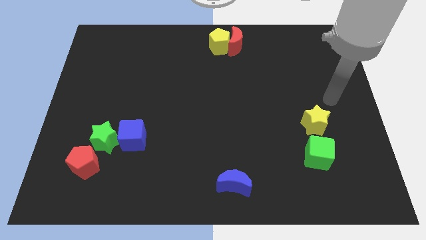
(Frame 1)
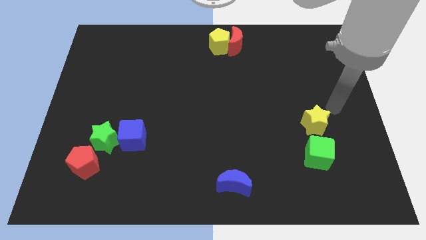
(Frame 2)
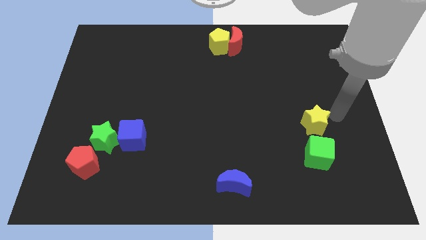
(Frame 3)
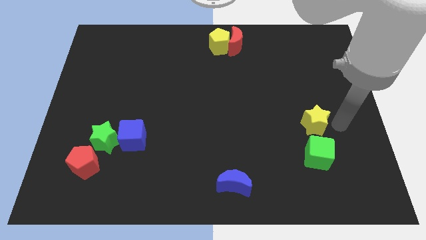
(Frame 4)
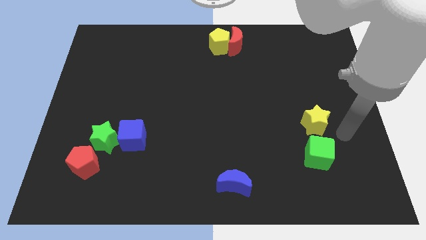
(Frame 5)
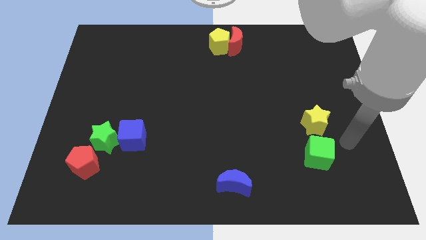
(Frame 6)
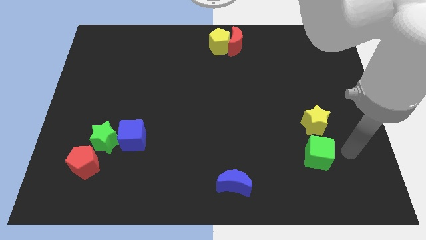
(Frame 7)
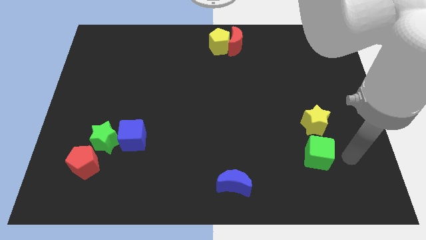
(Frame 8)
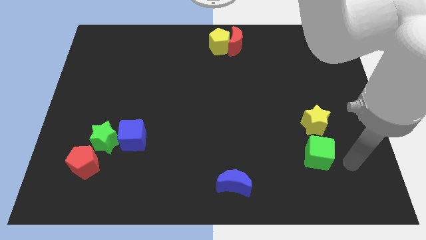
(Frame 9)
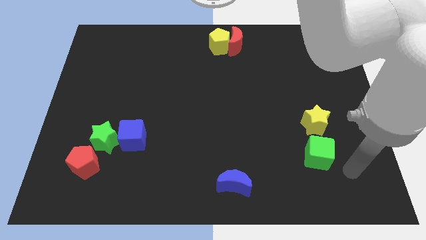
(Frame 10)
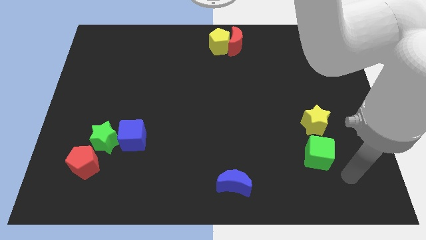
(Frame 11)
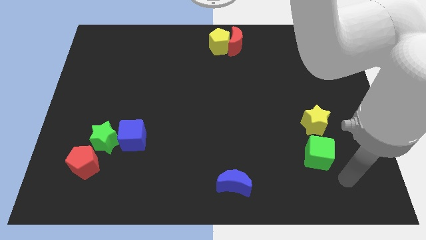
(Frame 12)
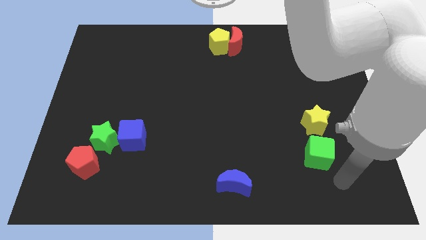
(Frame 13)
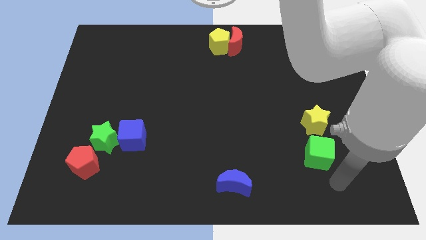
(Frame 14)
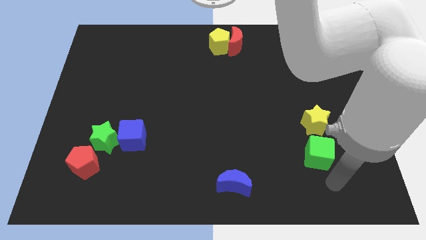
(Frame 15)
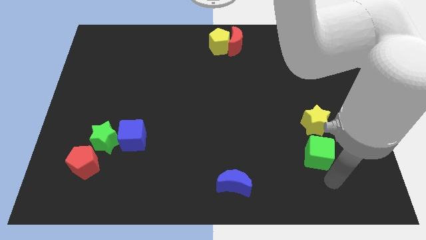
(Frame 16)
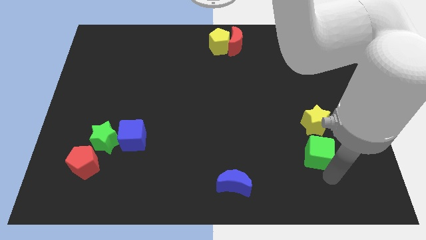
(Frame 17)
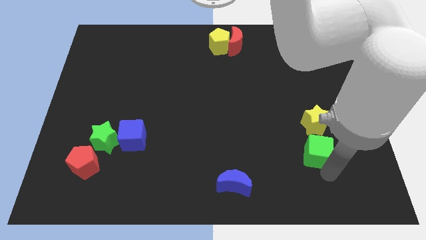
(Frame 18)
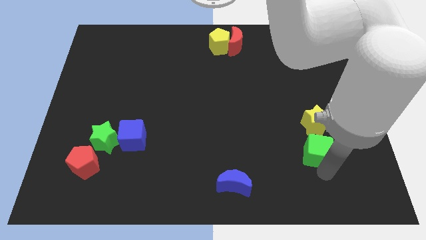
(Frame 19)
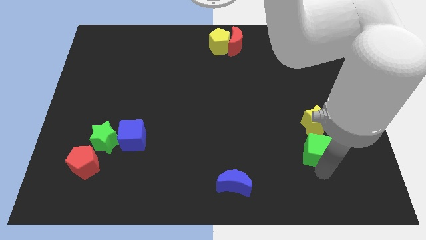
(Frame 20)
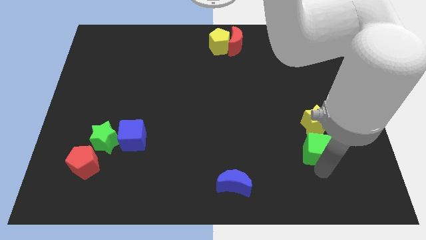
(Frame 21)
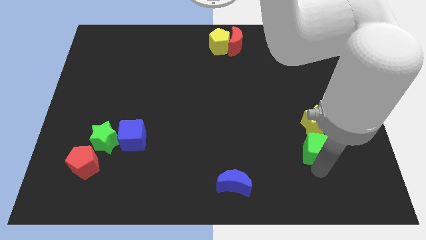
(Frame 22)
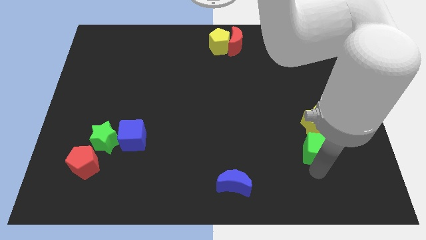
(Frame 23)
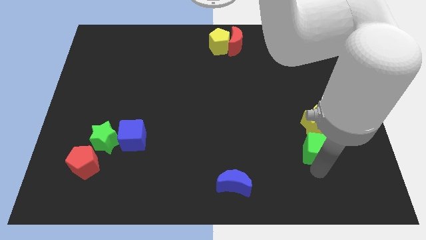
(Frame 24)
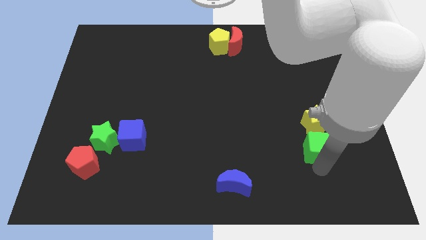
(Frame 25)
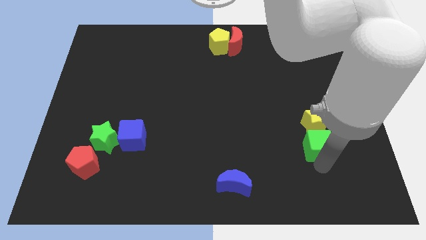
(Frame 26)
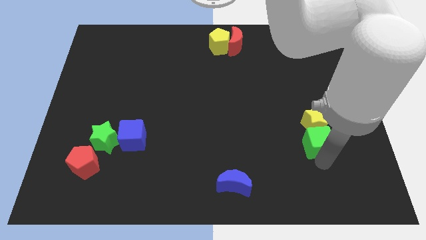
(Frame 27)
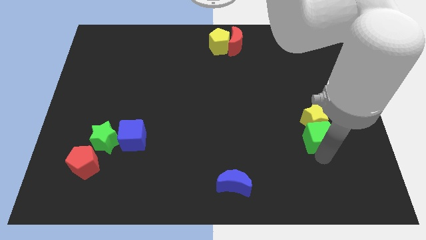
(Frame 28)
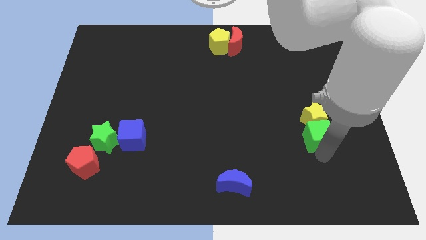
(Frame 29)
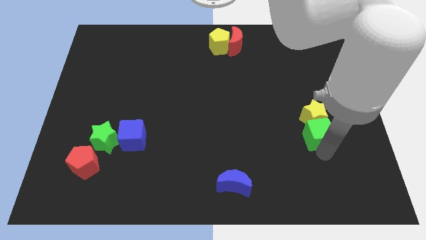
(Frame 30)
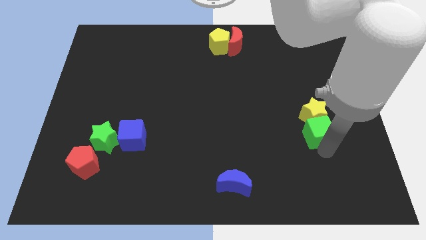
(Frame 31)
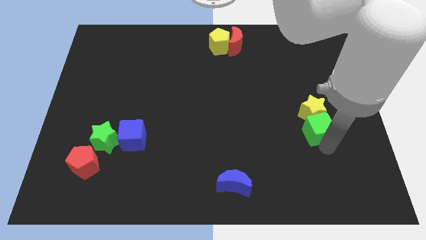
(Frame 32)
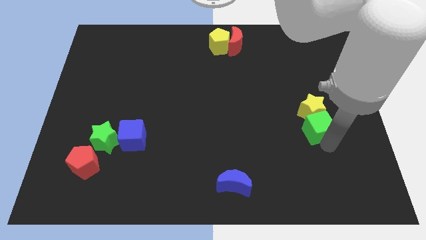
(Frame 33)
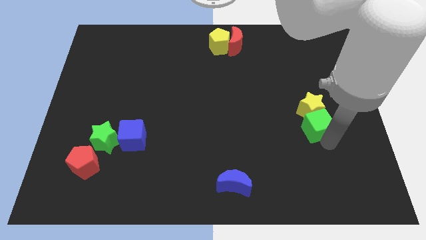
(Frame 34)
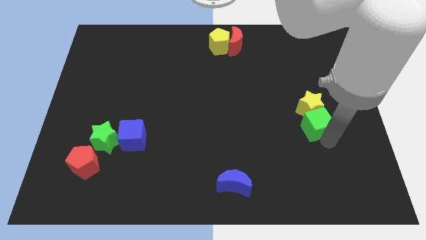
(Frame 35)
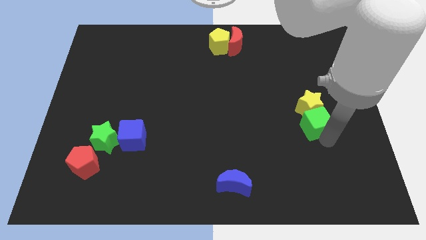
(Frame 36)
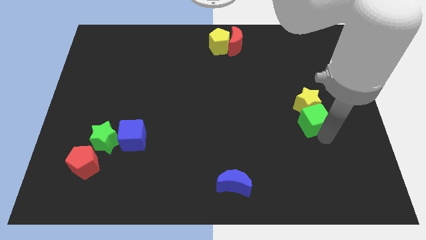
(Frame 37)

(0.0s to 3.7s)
move the yellow star with green cube to the upward

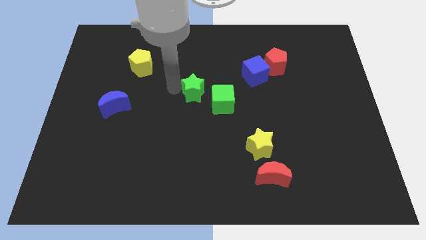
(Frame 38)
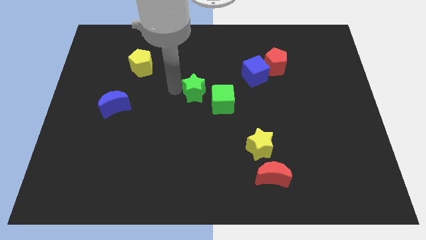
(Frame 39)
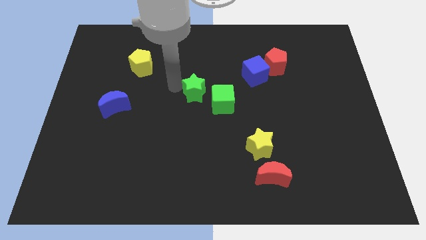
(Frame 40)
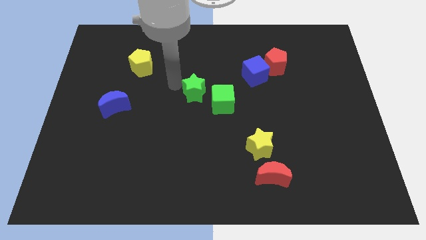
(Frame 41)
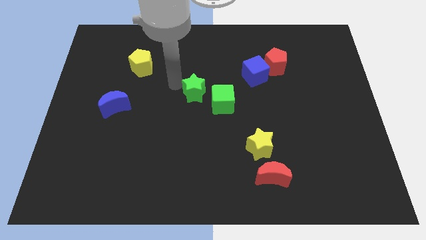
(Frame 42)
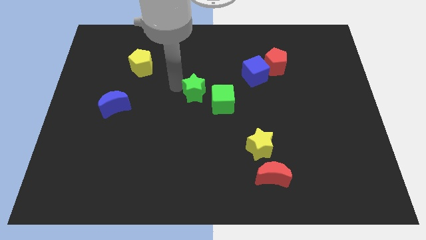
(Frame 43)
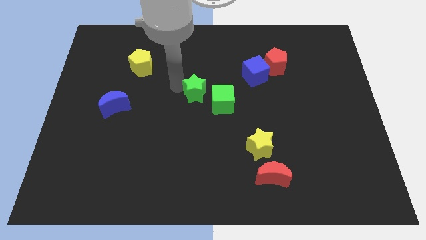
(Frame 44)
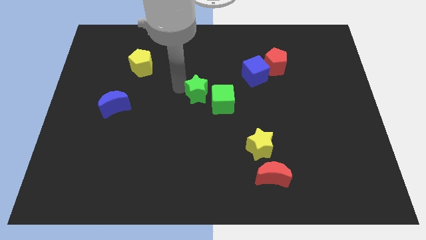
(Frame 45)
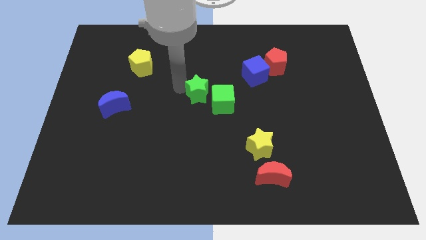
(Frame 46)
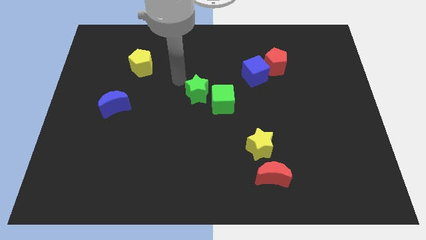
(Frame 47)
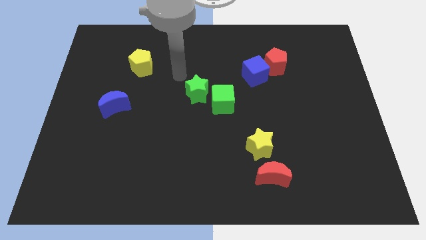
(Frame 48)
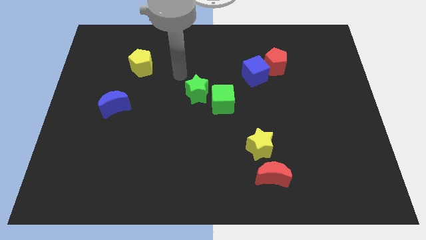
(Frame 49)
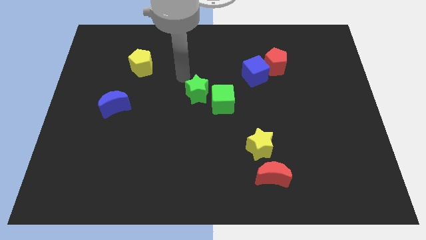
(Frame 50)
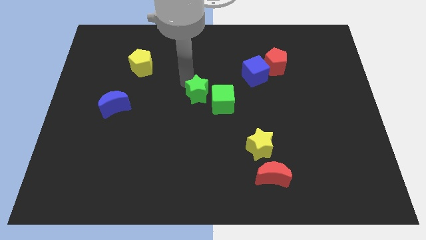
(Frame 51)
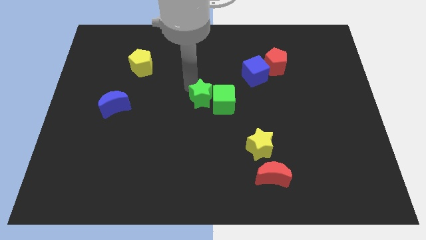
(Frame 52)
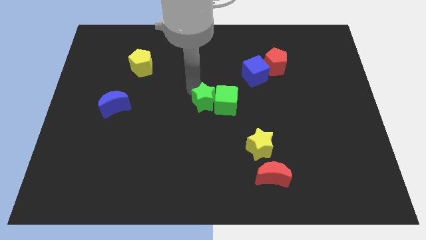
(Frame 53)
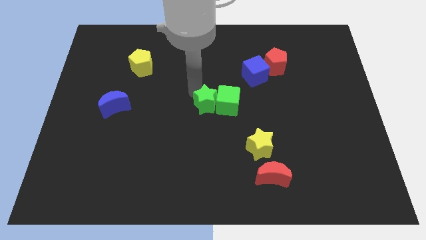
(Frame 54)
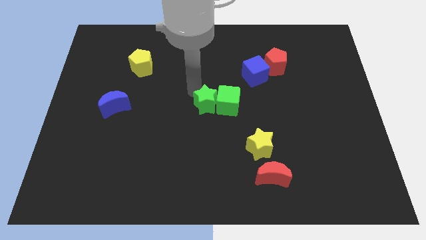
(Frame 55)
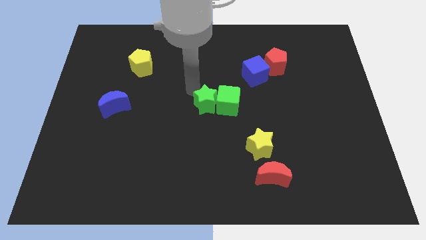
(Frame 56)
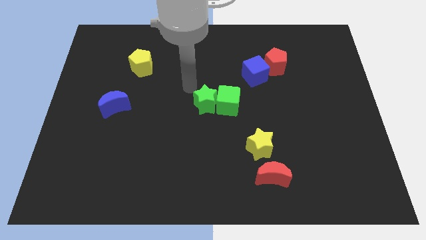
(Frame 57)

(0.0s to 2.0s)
move the green star to the left of the green cube

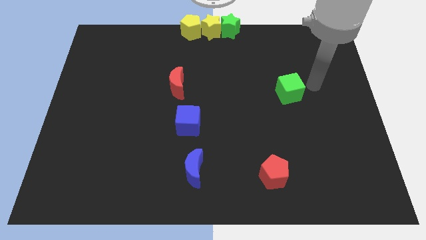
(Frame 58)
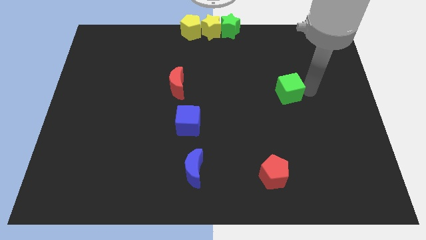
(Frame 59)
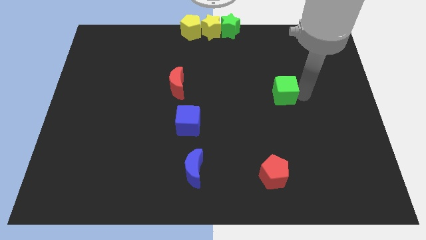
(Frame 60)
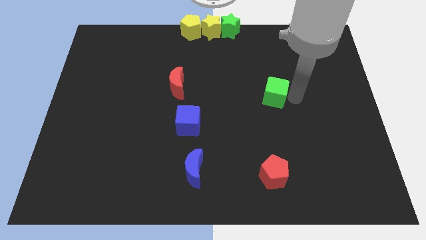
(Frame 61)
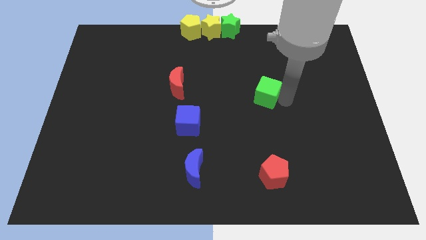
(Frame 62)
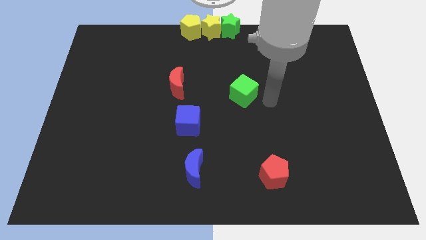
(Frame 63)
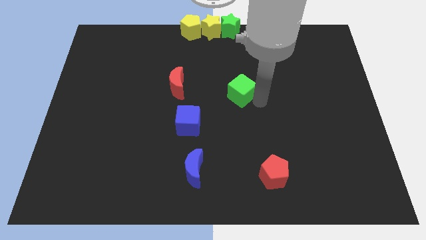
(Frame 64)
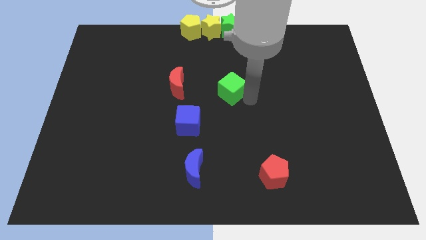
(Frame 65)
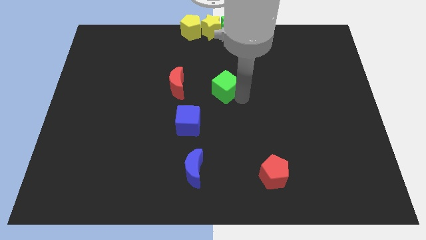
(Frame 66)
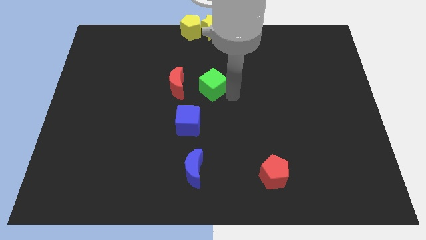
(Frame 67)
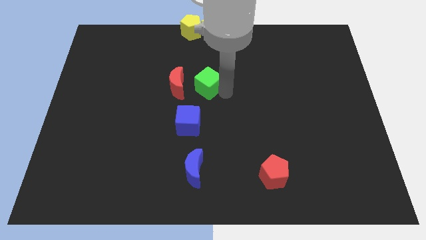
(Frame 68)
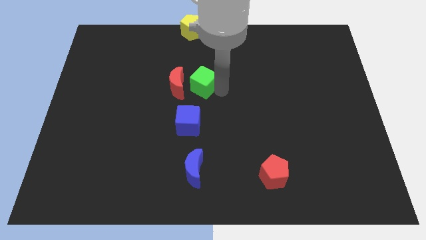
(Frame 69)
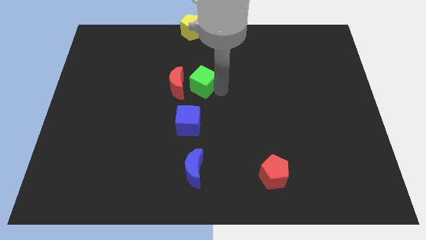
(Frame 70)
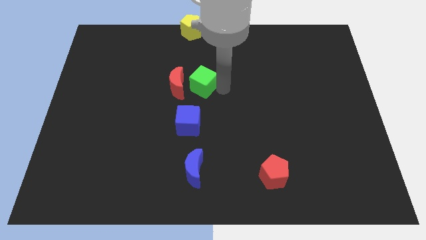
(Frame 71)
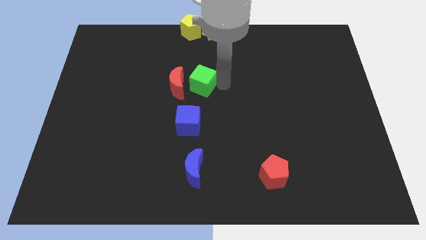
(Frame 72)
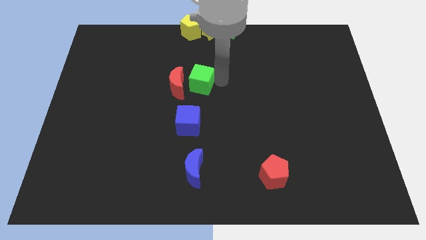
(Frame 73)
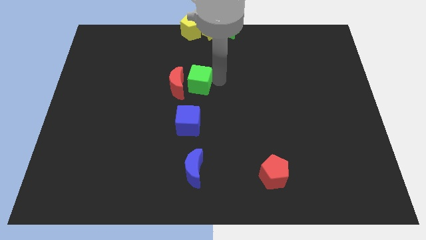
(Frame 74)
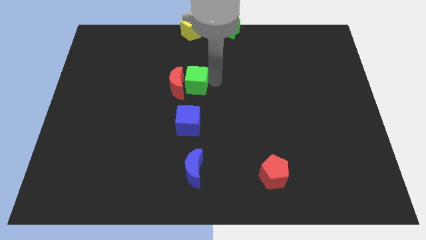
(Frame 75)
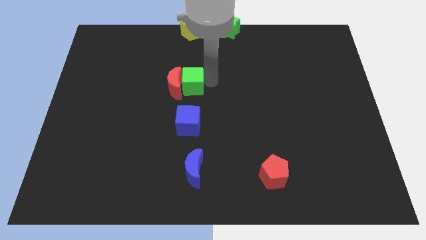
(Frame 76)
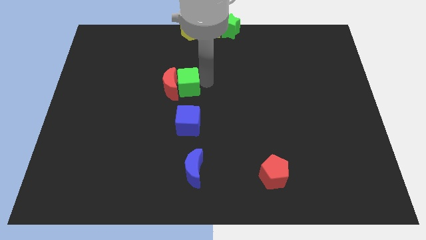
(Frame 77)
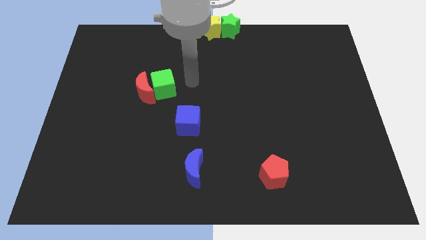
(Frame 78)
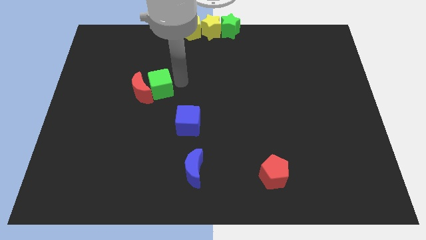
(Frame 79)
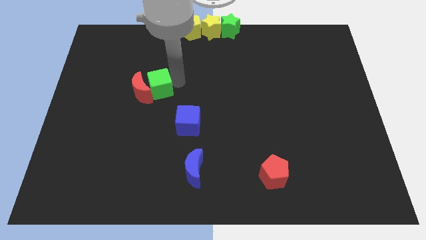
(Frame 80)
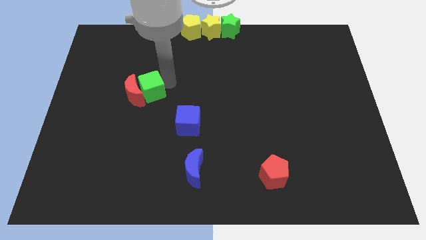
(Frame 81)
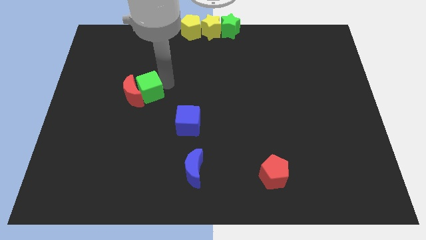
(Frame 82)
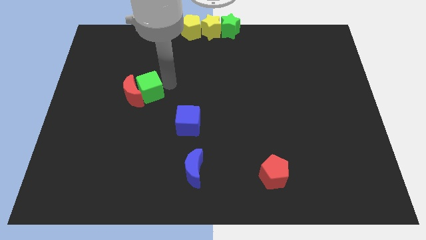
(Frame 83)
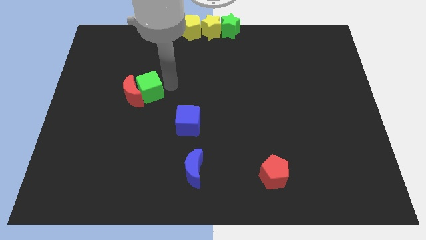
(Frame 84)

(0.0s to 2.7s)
push the green cube into the red crescent

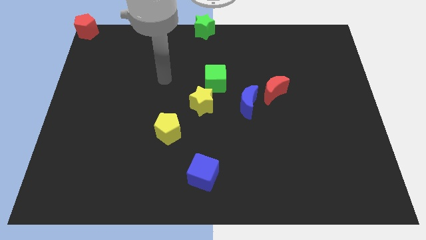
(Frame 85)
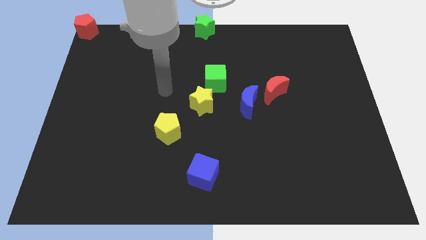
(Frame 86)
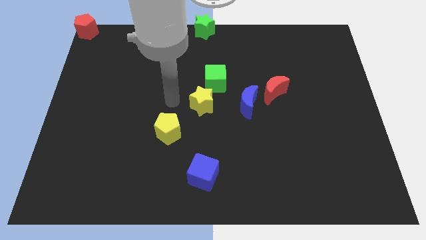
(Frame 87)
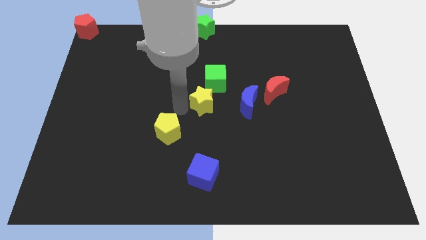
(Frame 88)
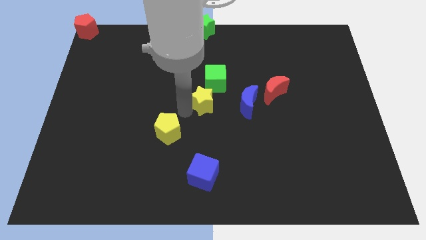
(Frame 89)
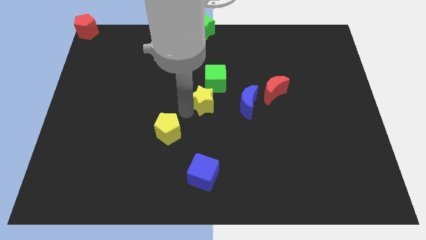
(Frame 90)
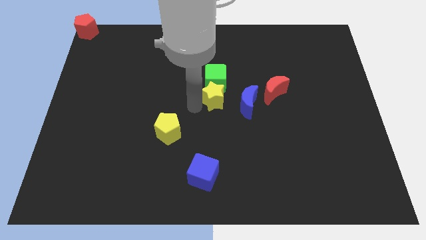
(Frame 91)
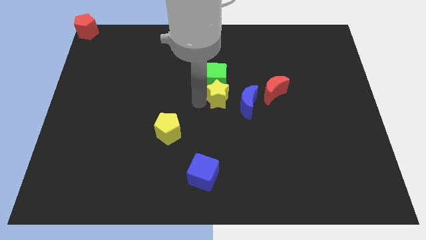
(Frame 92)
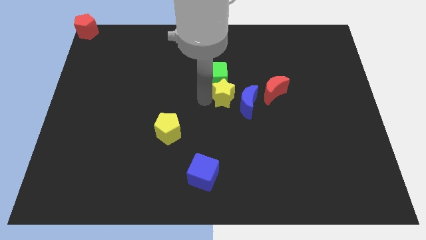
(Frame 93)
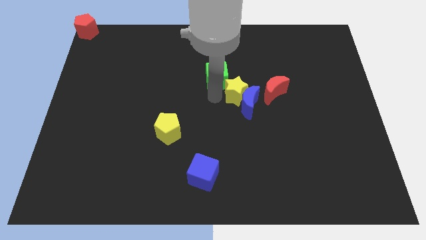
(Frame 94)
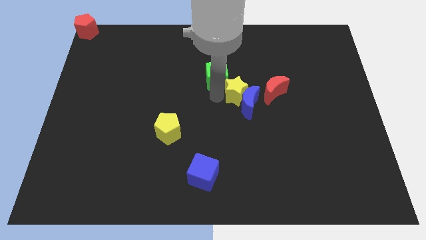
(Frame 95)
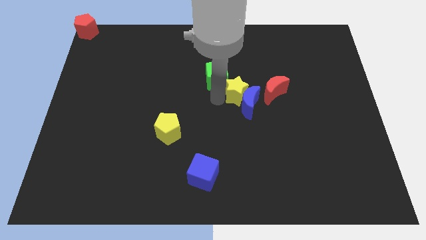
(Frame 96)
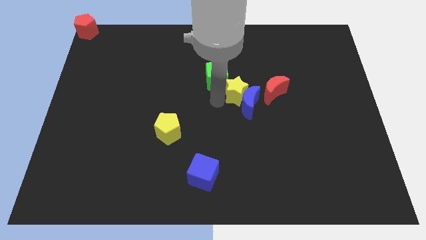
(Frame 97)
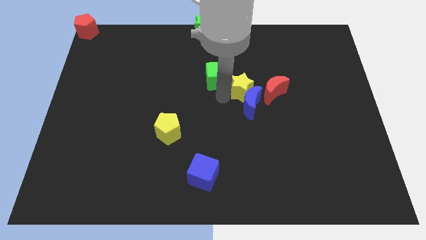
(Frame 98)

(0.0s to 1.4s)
push the yellow star diagonally in between green cube and blue crescent
